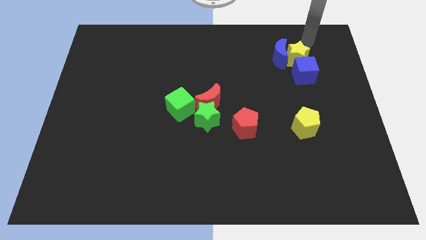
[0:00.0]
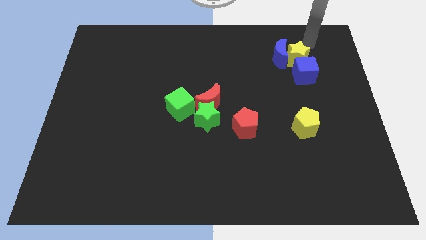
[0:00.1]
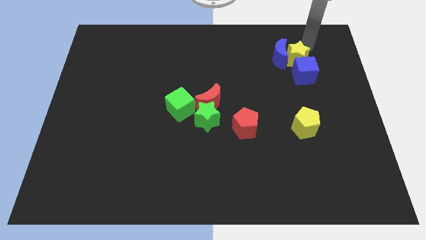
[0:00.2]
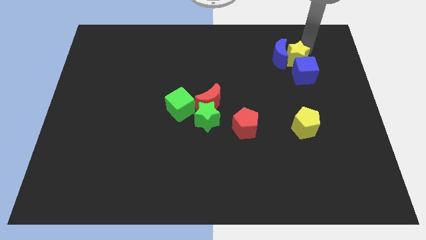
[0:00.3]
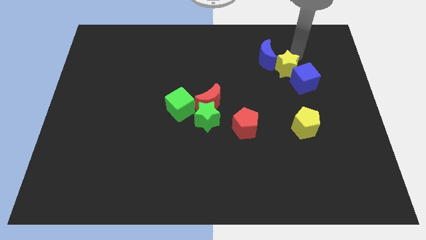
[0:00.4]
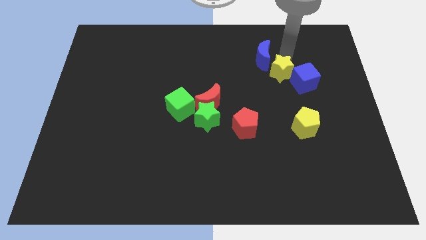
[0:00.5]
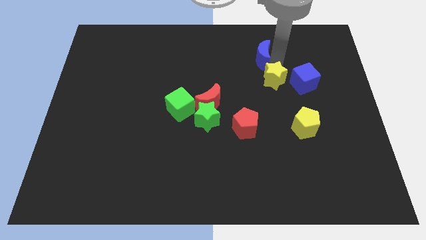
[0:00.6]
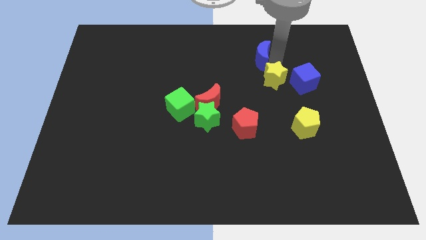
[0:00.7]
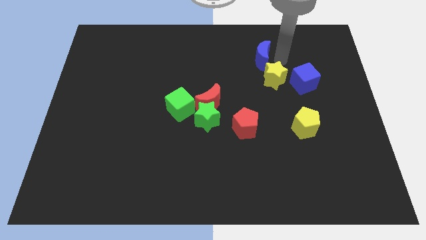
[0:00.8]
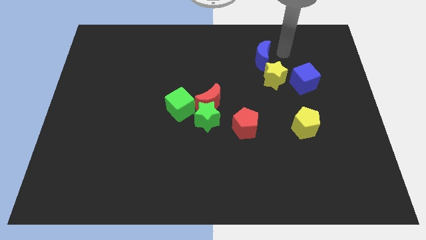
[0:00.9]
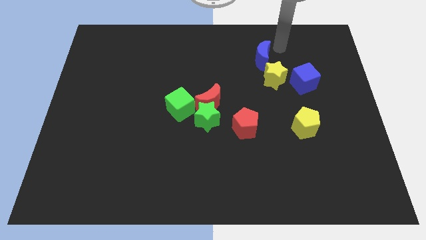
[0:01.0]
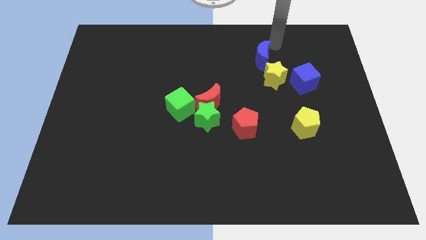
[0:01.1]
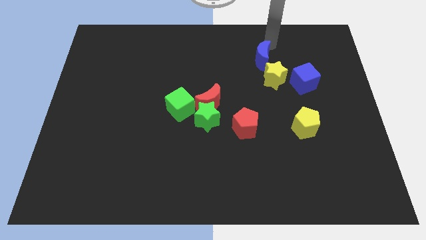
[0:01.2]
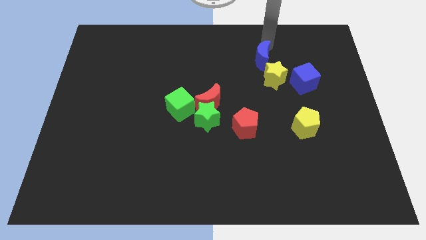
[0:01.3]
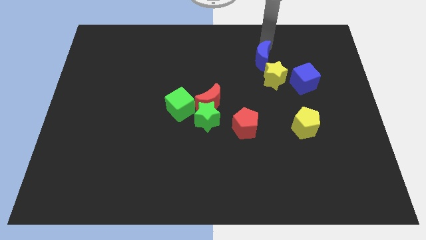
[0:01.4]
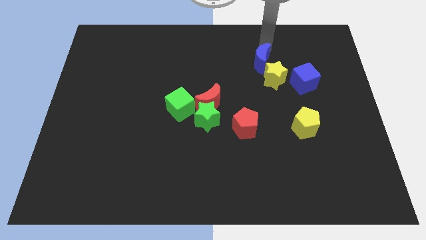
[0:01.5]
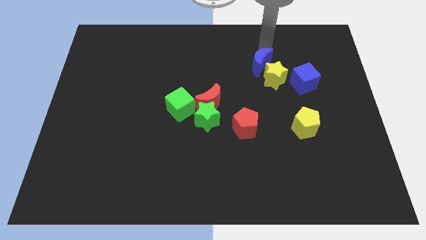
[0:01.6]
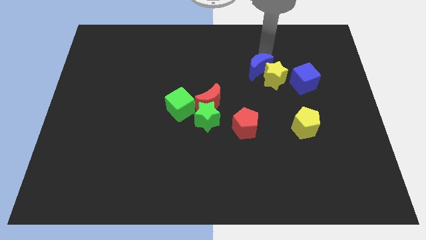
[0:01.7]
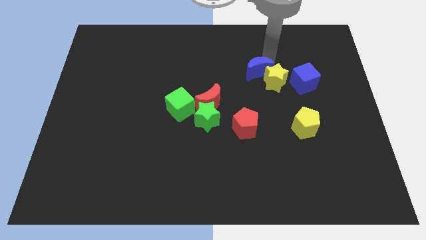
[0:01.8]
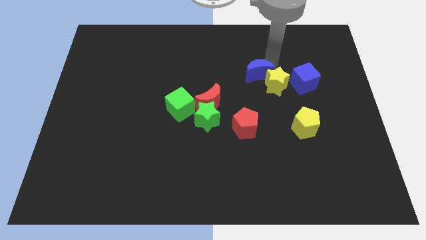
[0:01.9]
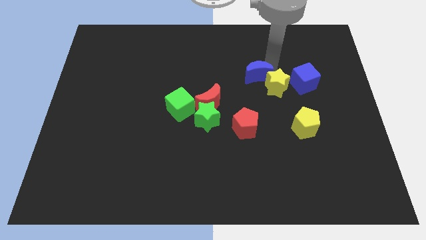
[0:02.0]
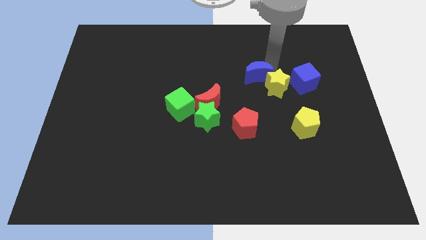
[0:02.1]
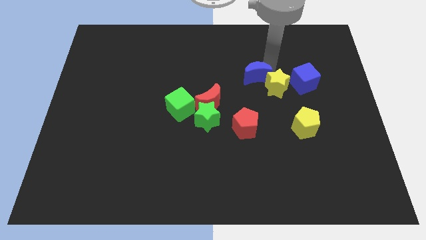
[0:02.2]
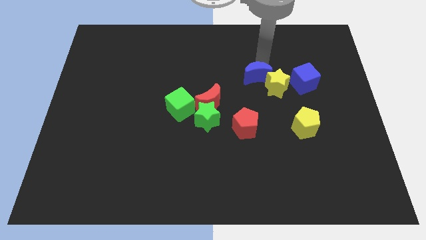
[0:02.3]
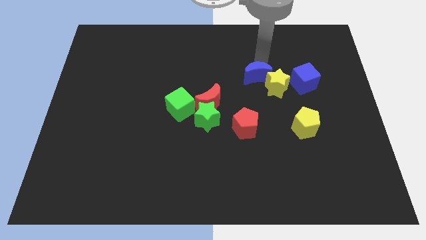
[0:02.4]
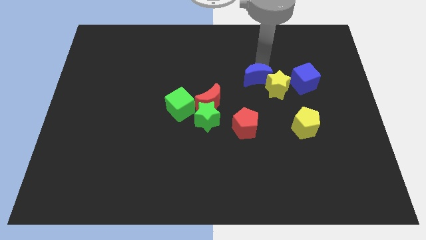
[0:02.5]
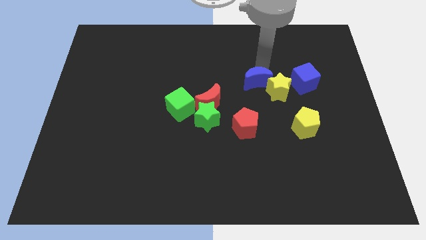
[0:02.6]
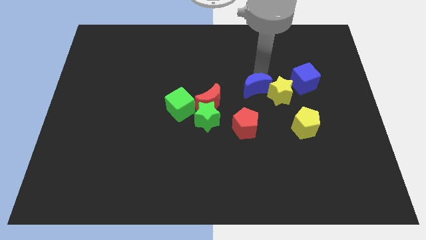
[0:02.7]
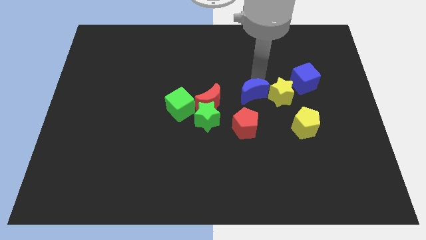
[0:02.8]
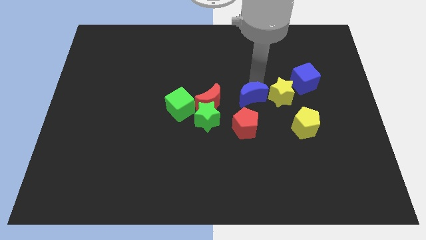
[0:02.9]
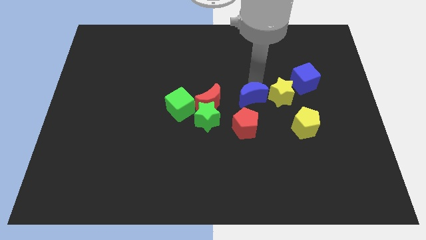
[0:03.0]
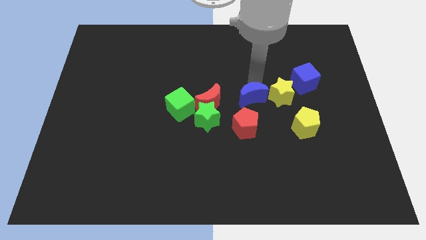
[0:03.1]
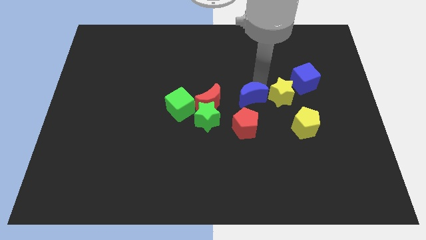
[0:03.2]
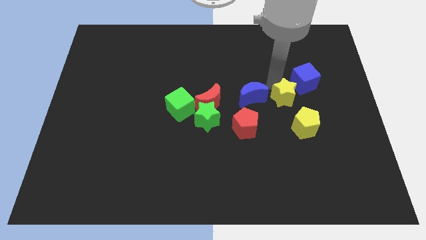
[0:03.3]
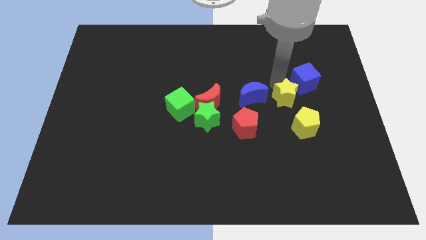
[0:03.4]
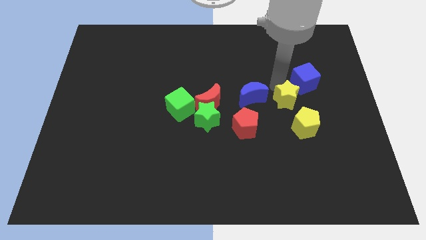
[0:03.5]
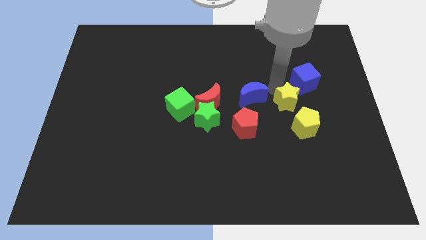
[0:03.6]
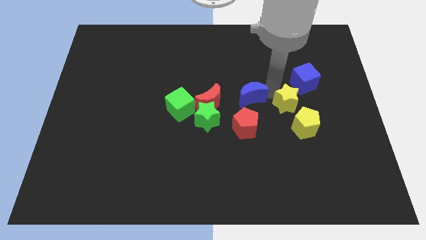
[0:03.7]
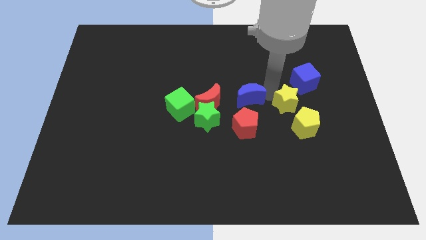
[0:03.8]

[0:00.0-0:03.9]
move the yellow star block slightly close to the yellow pentagon

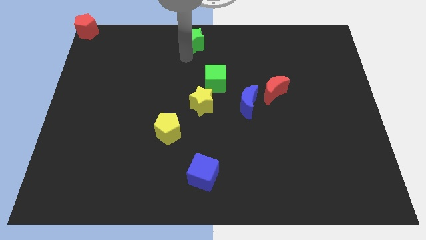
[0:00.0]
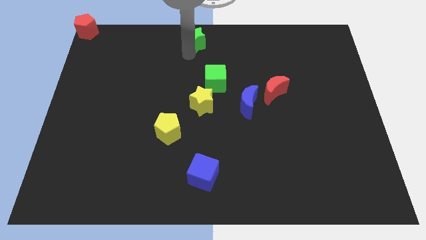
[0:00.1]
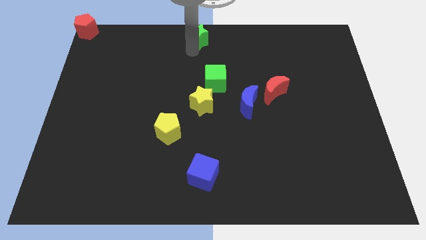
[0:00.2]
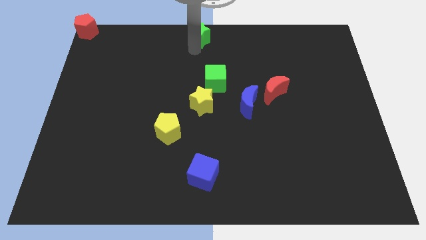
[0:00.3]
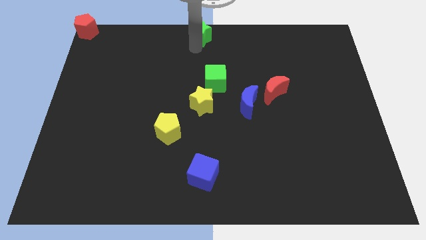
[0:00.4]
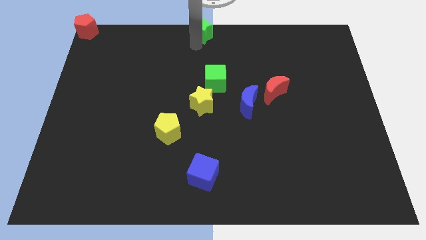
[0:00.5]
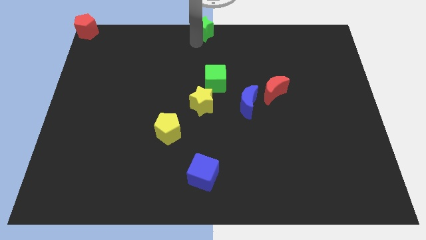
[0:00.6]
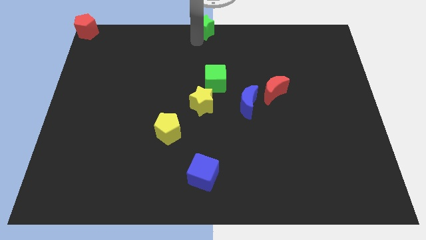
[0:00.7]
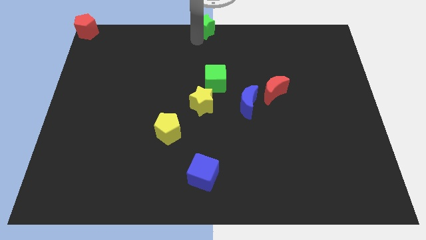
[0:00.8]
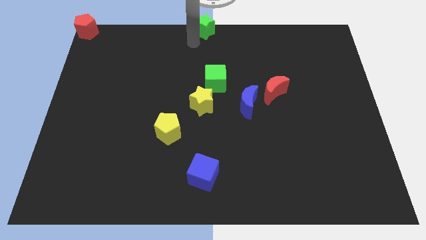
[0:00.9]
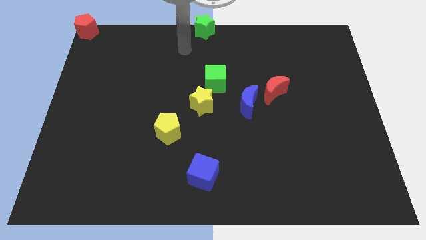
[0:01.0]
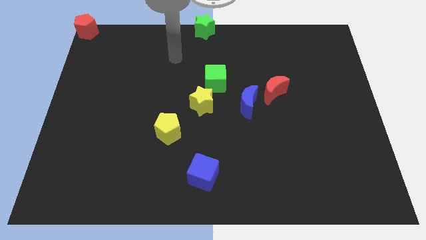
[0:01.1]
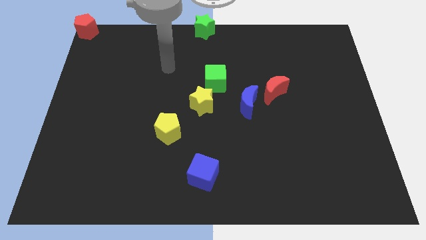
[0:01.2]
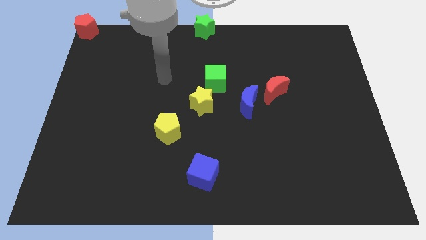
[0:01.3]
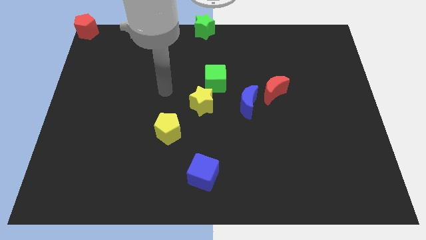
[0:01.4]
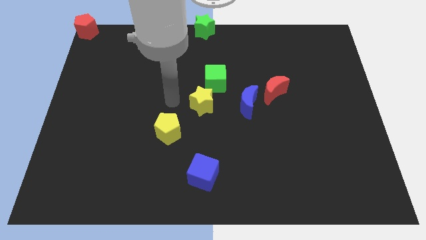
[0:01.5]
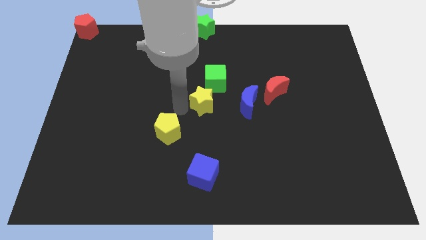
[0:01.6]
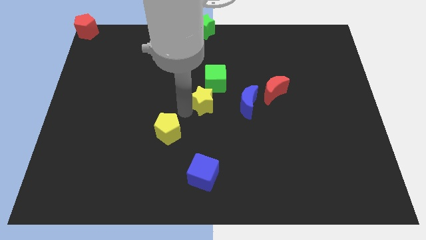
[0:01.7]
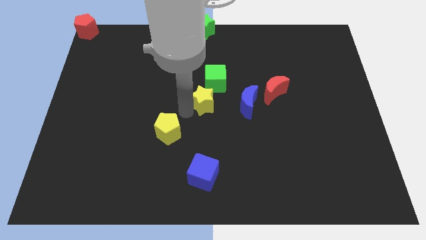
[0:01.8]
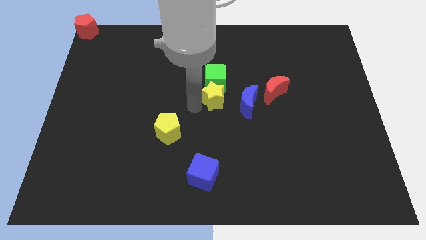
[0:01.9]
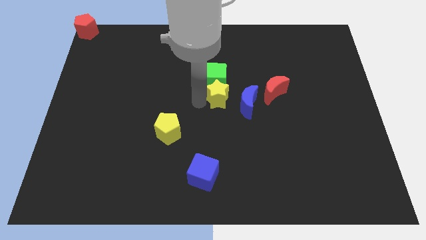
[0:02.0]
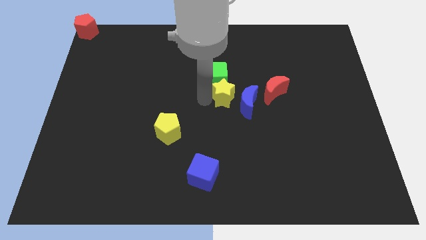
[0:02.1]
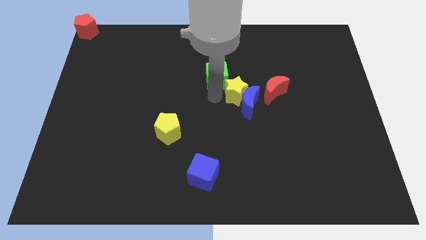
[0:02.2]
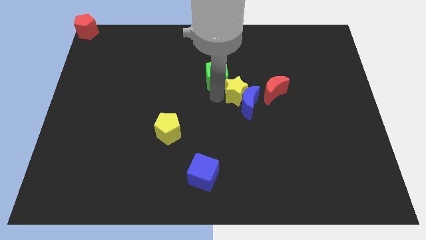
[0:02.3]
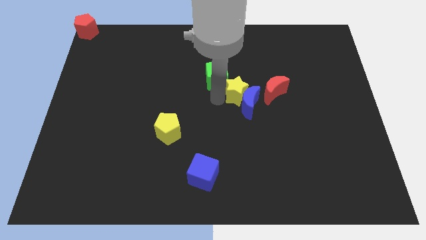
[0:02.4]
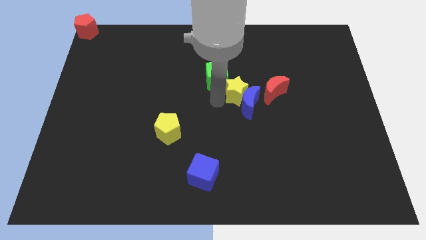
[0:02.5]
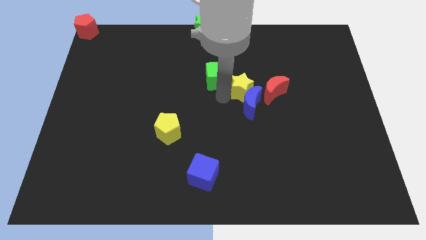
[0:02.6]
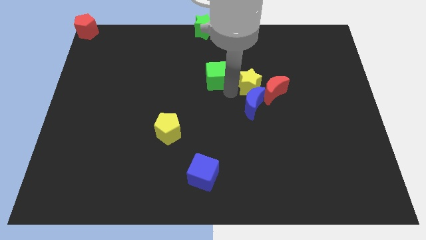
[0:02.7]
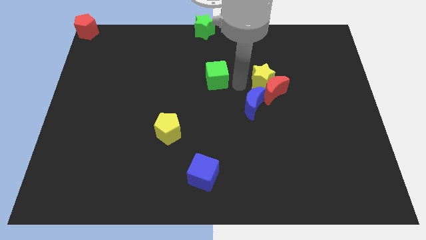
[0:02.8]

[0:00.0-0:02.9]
place yellow star above blue crescent

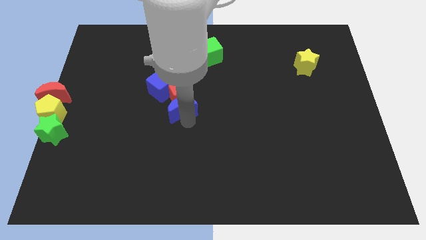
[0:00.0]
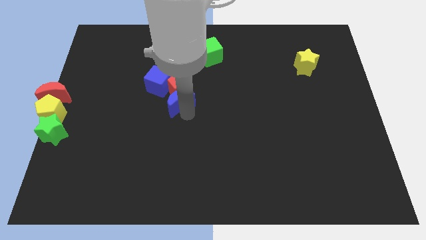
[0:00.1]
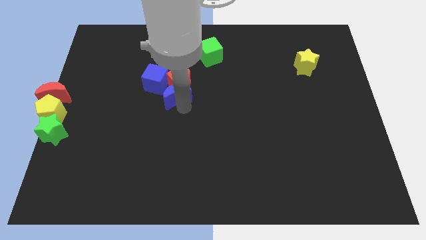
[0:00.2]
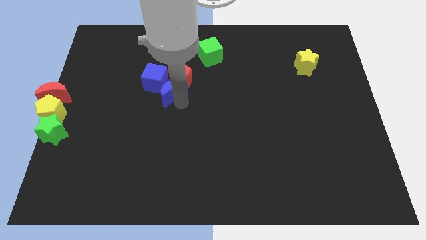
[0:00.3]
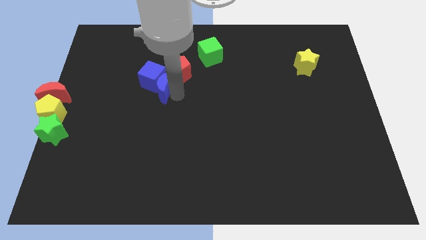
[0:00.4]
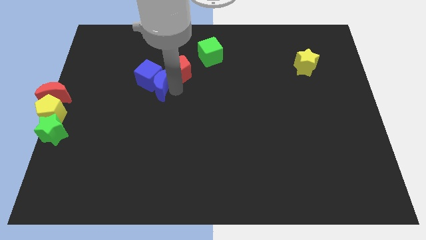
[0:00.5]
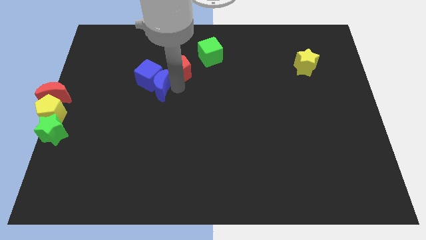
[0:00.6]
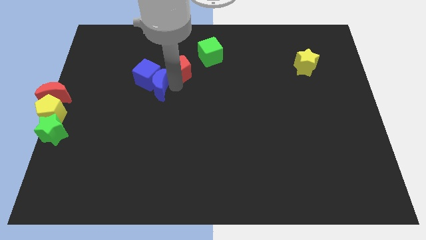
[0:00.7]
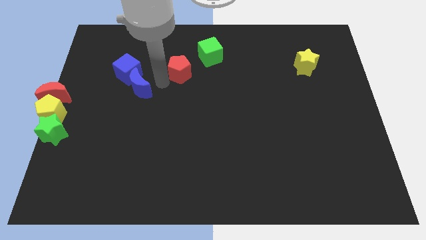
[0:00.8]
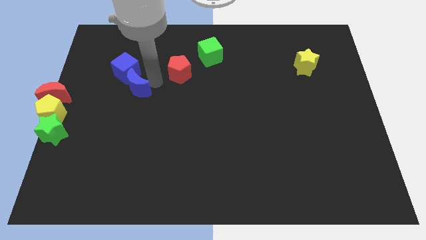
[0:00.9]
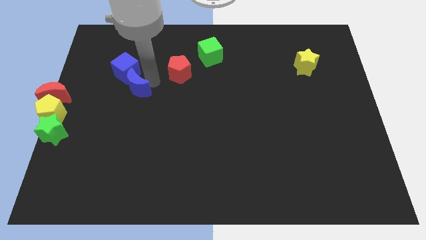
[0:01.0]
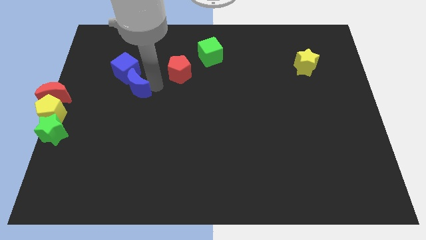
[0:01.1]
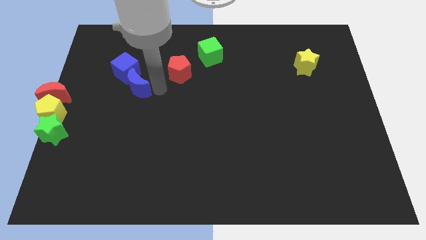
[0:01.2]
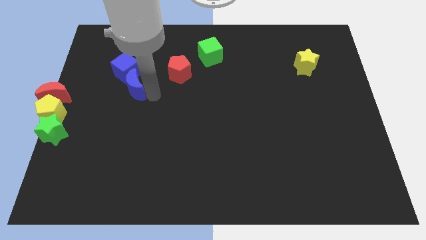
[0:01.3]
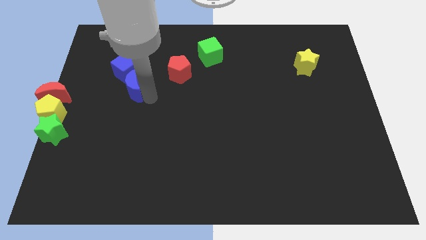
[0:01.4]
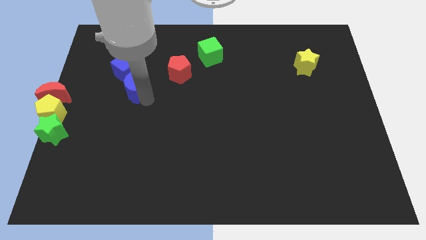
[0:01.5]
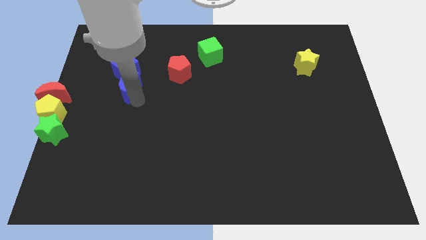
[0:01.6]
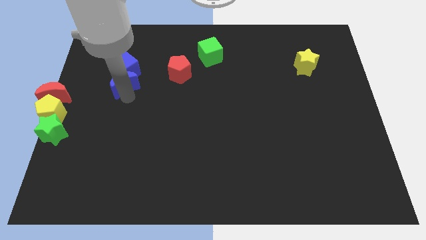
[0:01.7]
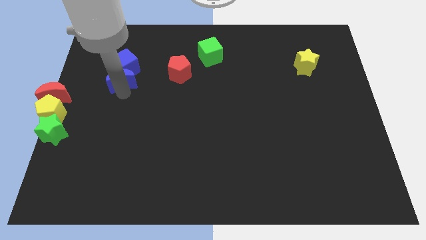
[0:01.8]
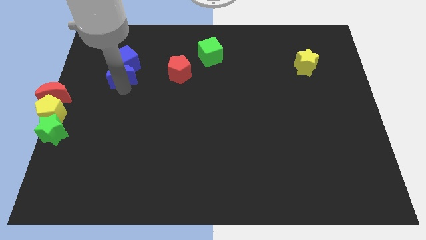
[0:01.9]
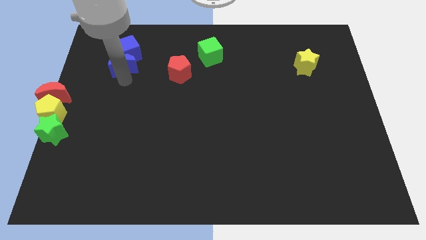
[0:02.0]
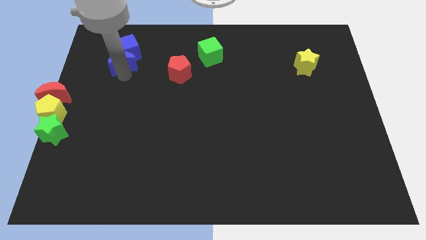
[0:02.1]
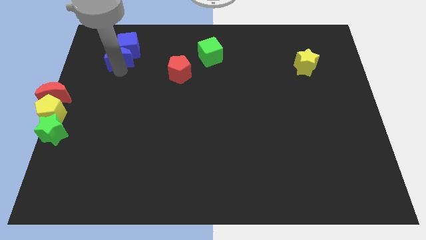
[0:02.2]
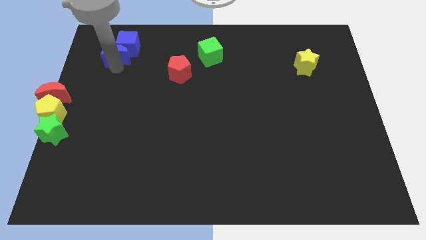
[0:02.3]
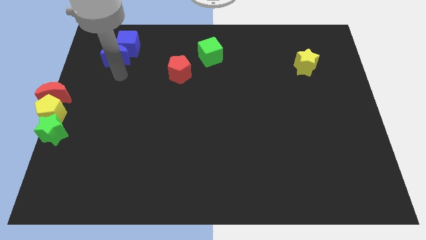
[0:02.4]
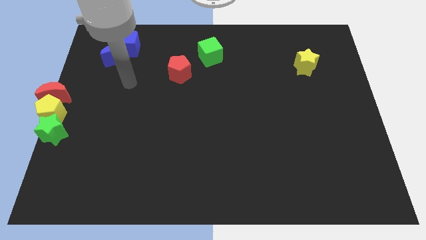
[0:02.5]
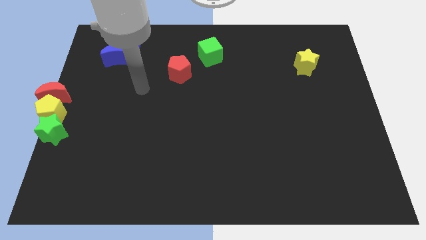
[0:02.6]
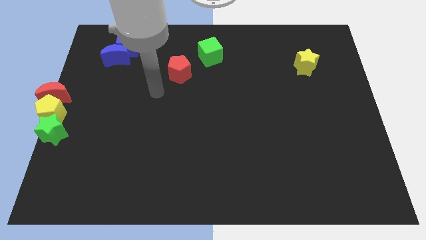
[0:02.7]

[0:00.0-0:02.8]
push the group of blue blocks to the top left of the board
